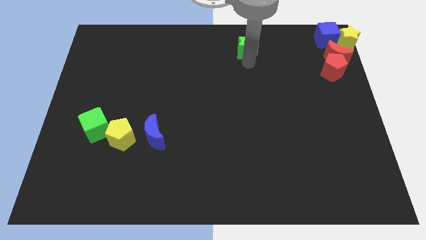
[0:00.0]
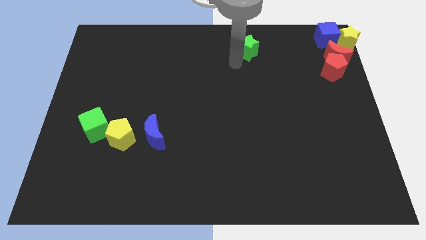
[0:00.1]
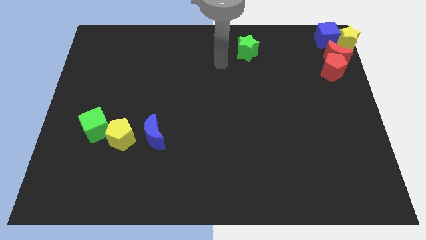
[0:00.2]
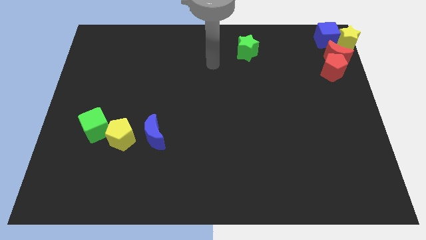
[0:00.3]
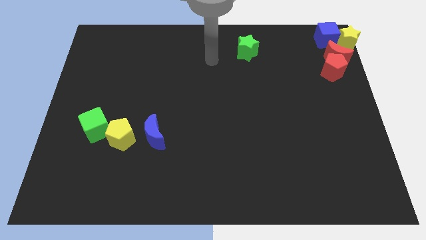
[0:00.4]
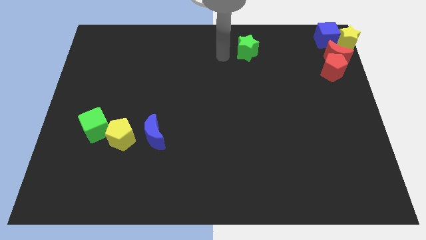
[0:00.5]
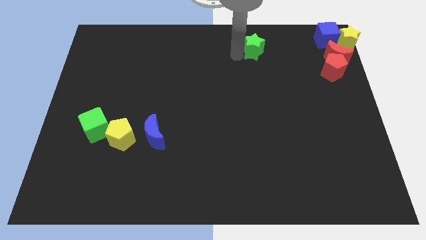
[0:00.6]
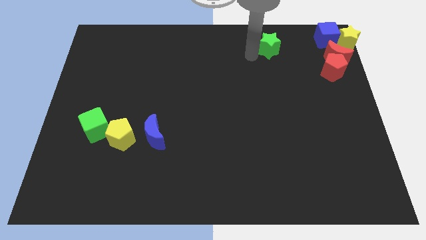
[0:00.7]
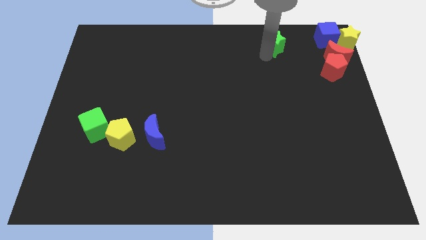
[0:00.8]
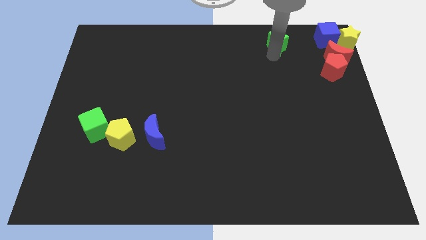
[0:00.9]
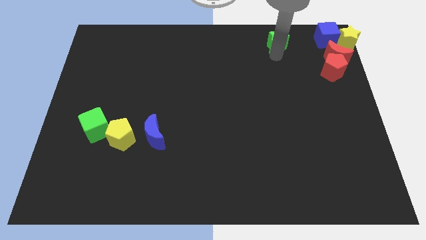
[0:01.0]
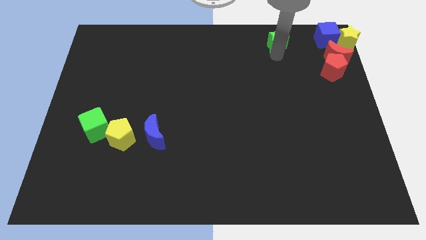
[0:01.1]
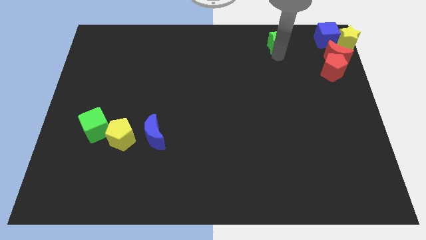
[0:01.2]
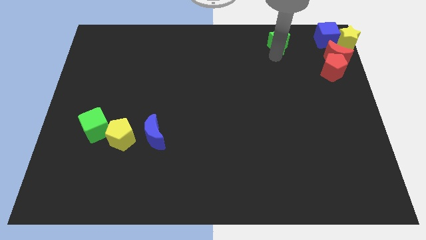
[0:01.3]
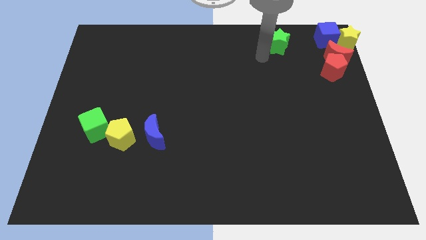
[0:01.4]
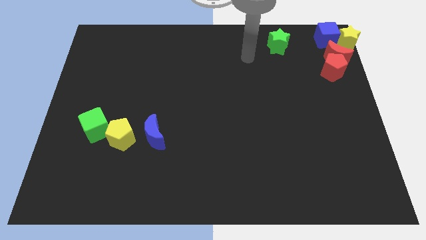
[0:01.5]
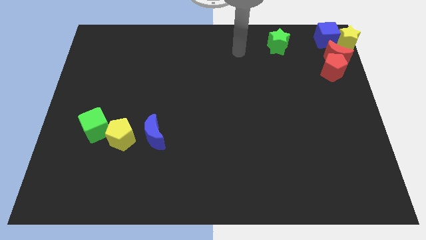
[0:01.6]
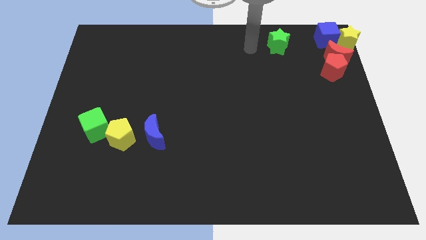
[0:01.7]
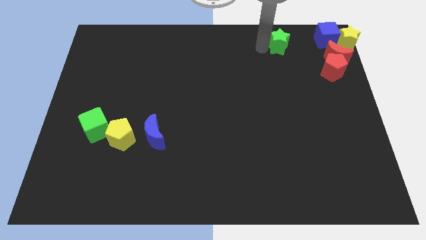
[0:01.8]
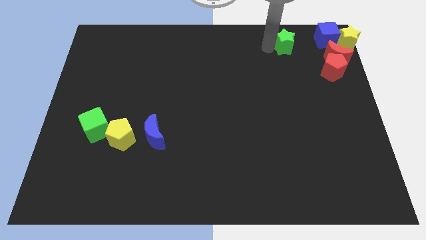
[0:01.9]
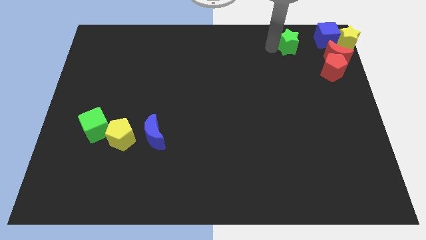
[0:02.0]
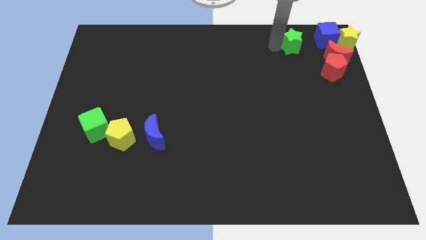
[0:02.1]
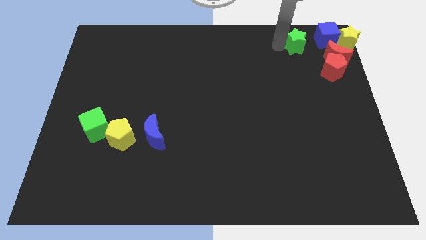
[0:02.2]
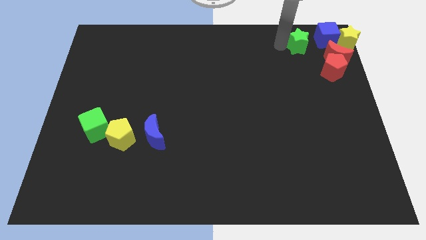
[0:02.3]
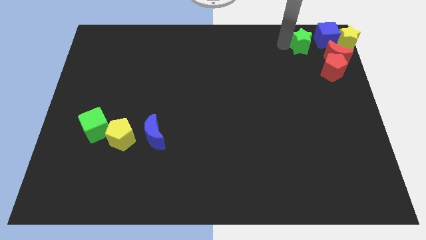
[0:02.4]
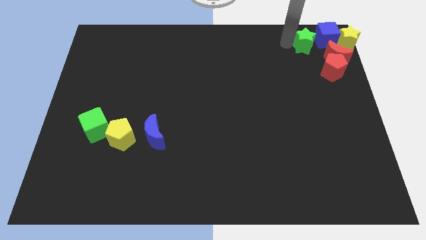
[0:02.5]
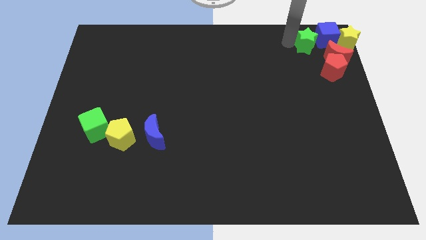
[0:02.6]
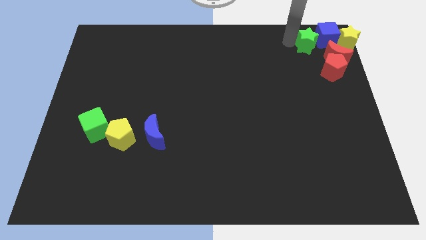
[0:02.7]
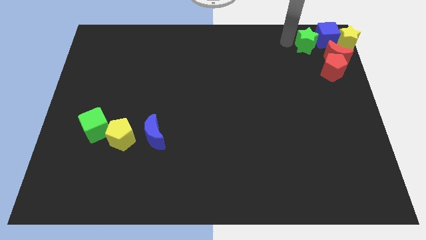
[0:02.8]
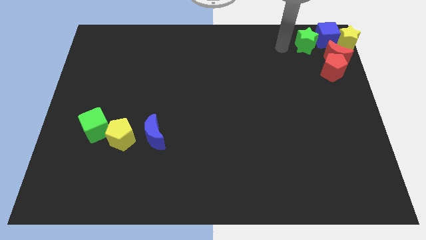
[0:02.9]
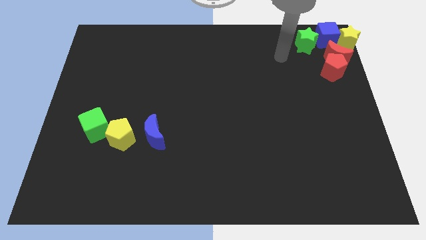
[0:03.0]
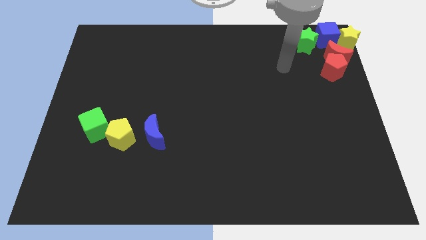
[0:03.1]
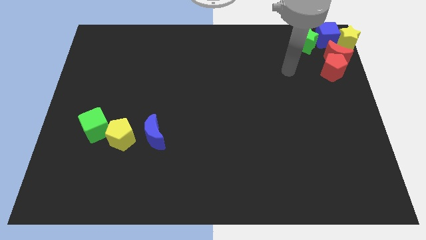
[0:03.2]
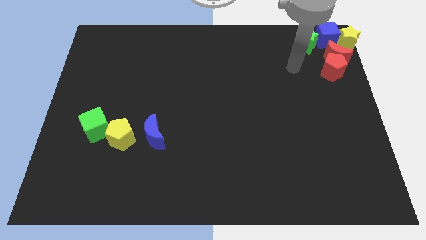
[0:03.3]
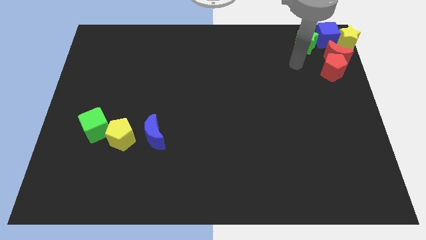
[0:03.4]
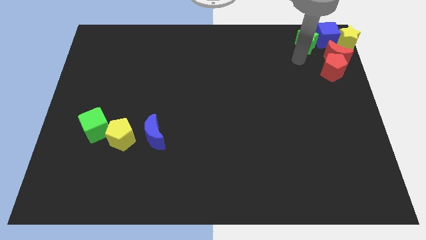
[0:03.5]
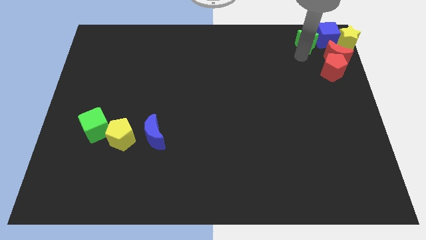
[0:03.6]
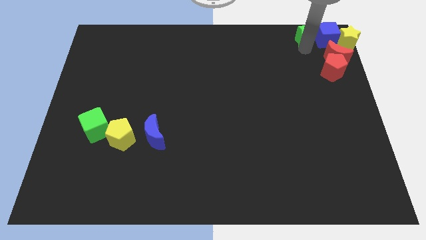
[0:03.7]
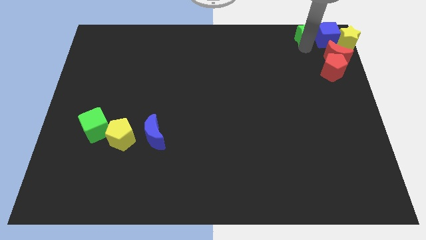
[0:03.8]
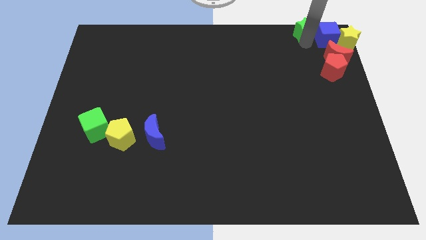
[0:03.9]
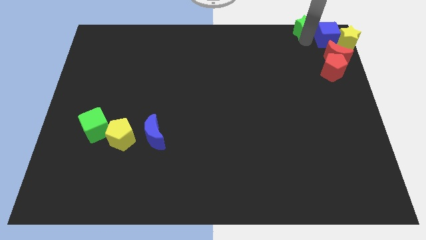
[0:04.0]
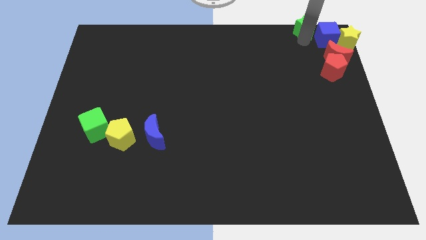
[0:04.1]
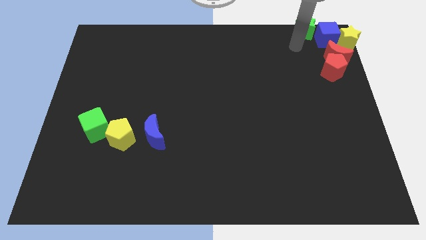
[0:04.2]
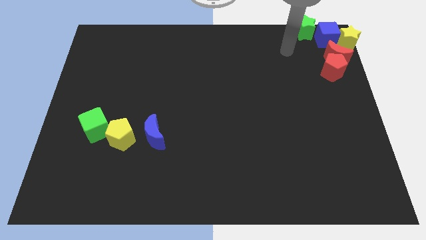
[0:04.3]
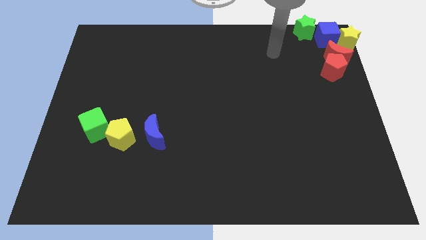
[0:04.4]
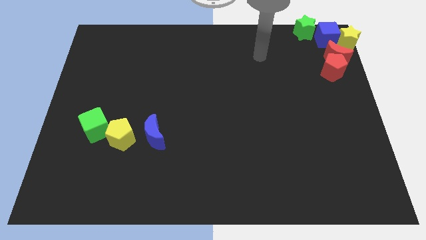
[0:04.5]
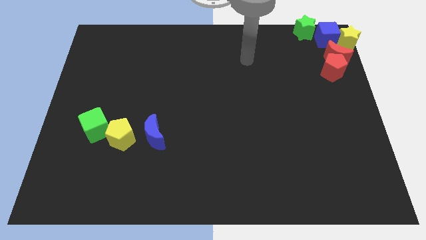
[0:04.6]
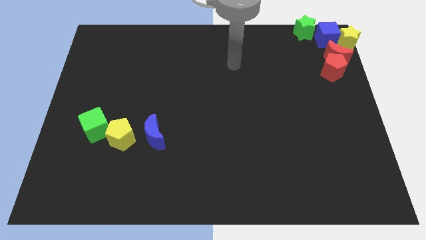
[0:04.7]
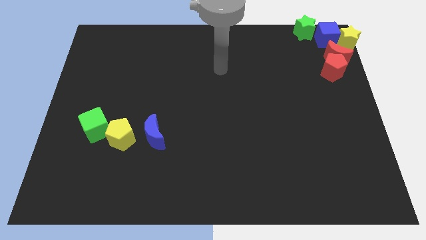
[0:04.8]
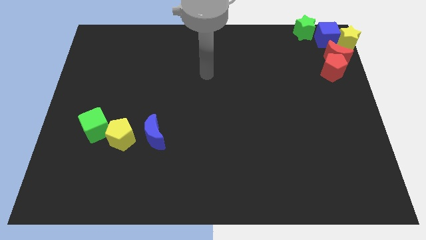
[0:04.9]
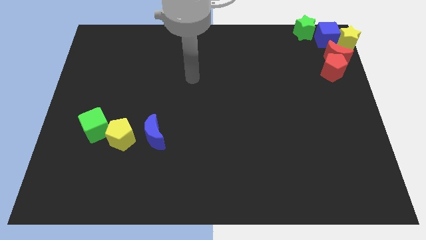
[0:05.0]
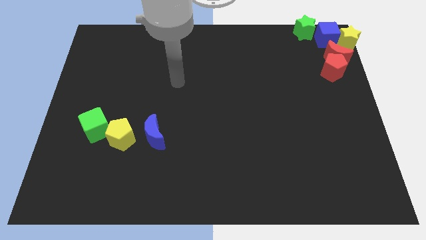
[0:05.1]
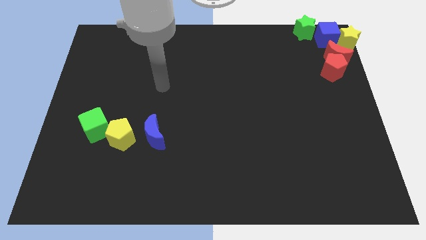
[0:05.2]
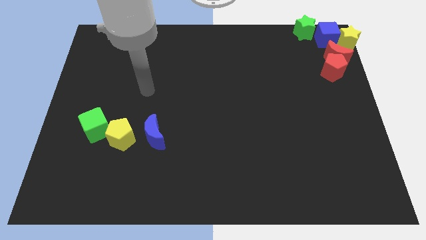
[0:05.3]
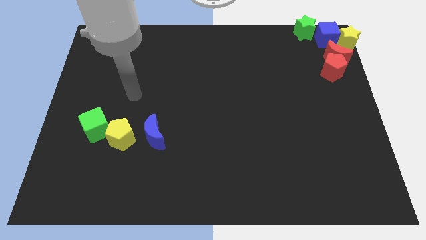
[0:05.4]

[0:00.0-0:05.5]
place green star to the top right corner of the board

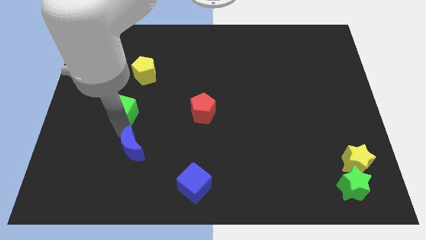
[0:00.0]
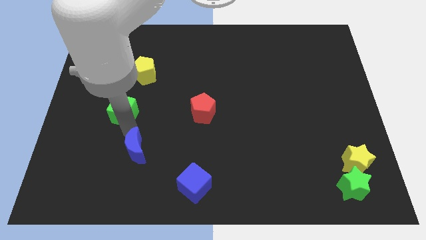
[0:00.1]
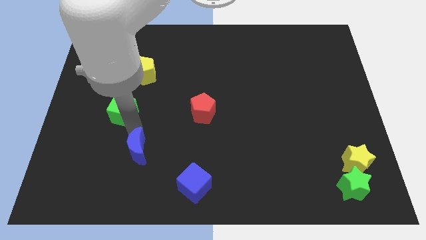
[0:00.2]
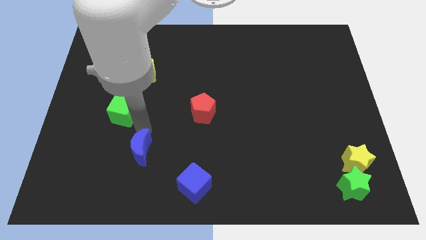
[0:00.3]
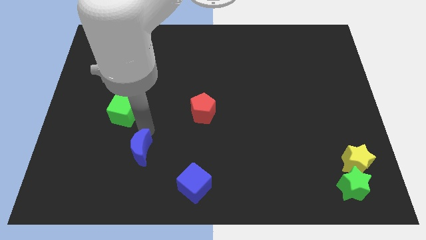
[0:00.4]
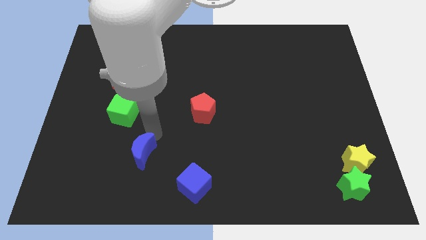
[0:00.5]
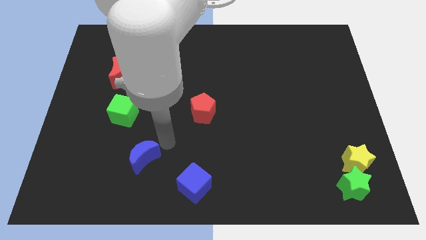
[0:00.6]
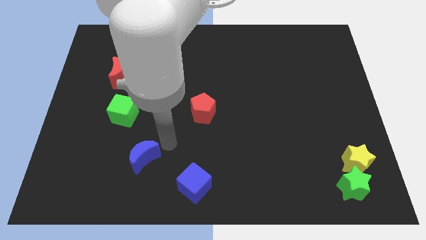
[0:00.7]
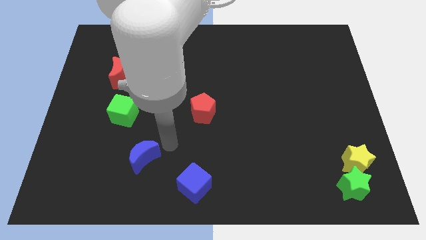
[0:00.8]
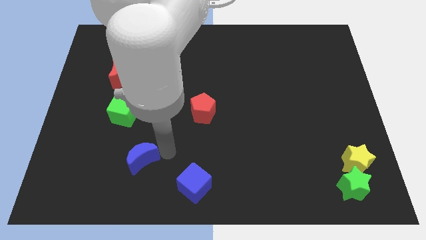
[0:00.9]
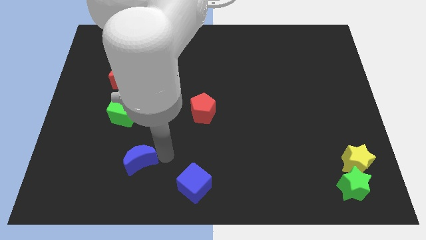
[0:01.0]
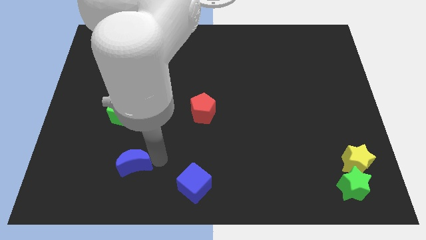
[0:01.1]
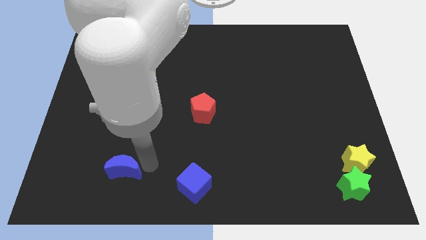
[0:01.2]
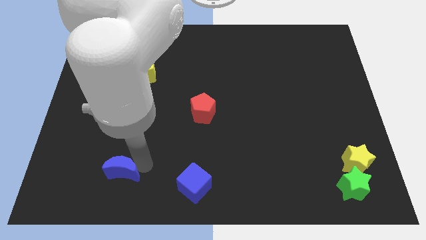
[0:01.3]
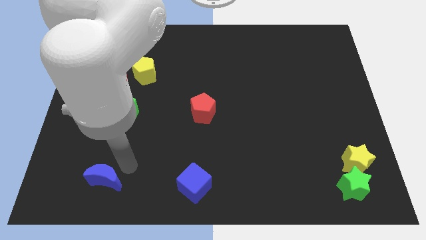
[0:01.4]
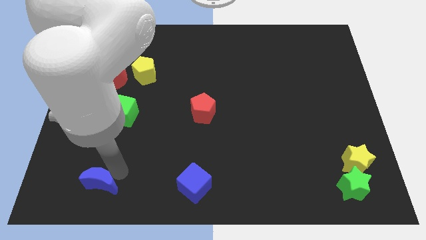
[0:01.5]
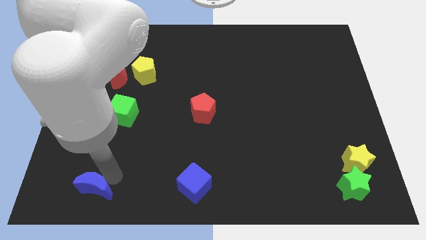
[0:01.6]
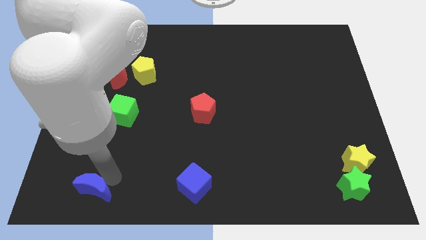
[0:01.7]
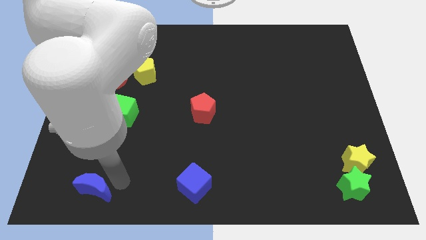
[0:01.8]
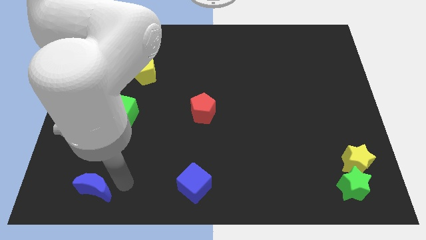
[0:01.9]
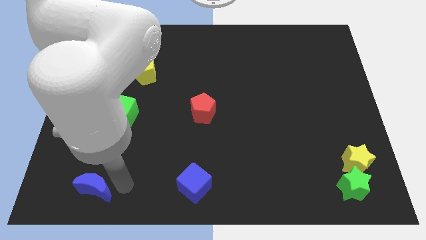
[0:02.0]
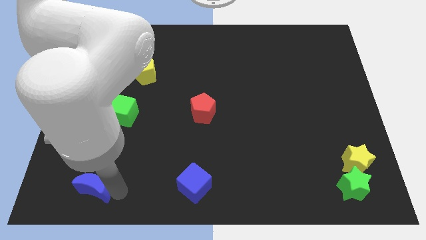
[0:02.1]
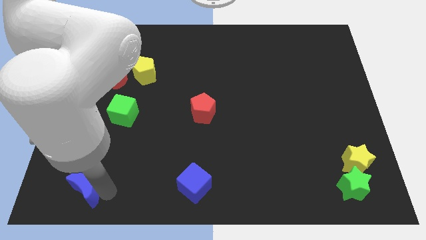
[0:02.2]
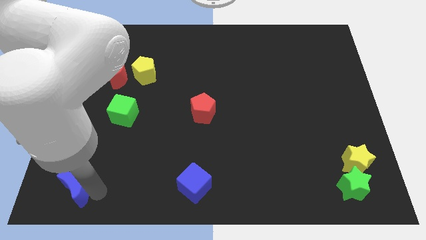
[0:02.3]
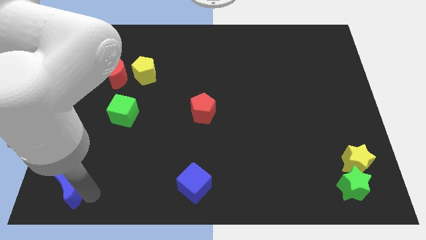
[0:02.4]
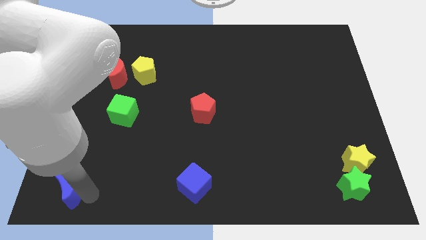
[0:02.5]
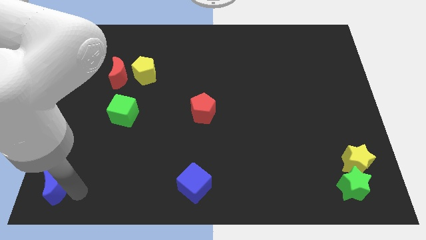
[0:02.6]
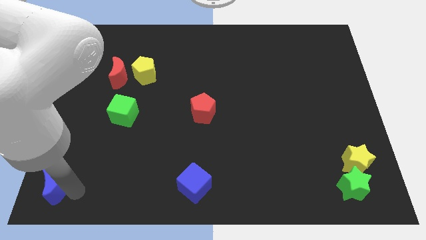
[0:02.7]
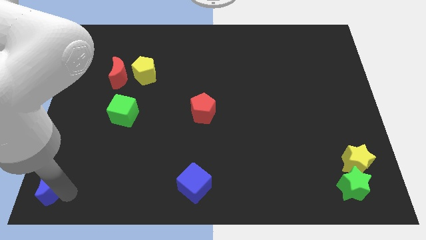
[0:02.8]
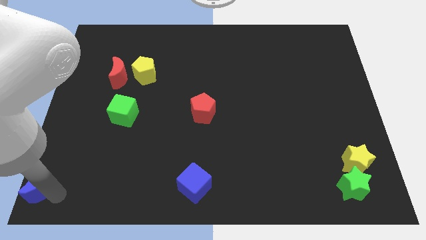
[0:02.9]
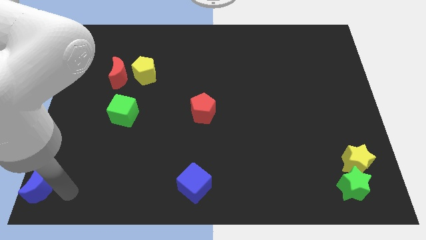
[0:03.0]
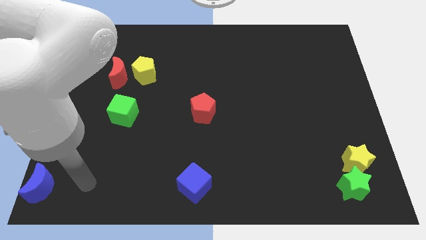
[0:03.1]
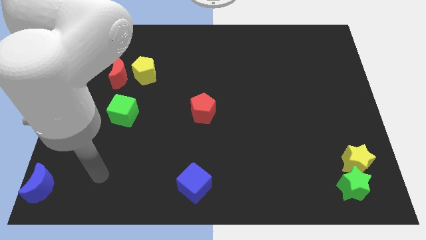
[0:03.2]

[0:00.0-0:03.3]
move the blue crescent to the bottom left of the board
